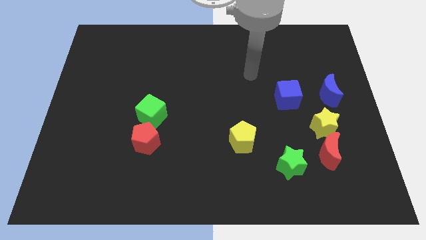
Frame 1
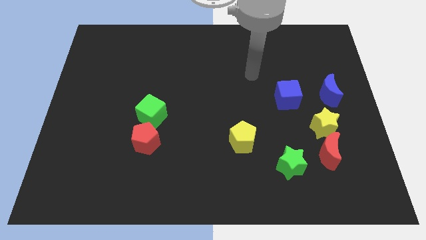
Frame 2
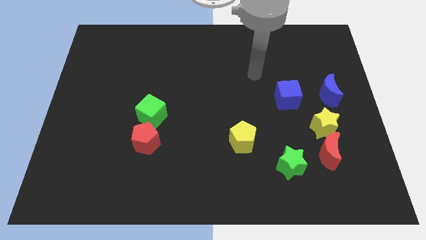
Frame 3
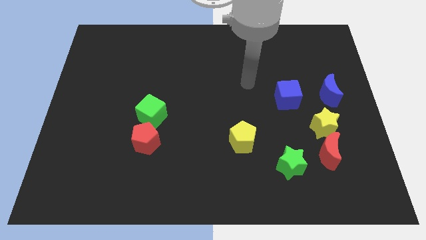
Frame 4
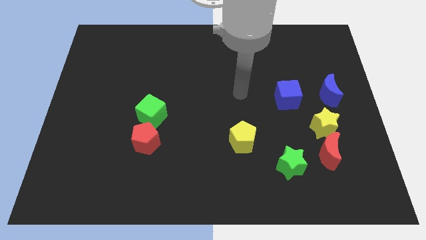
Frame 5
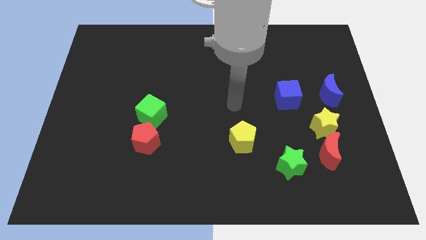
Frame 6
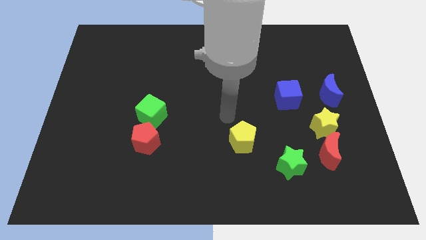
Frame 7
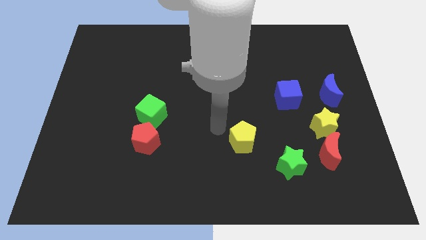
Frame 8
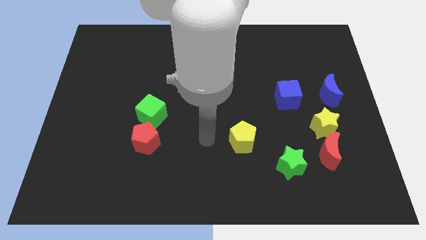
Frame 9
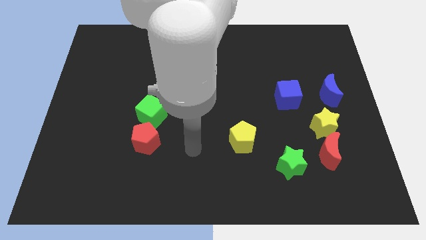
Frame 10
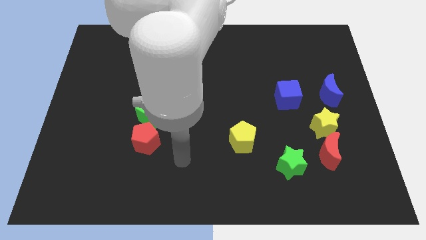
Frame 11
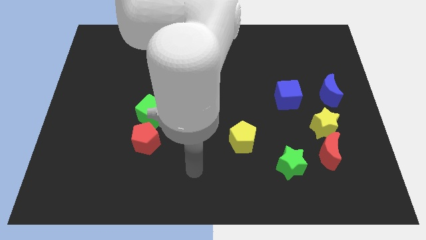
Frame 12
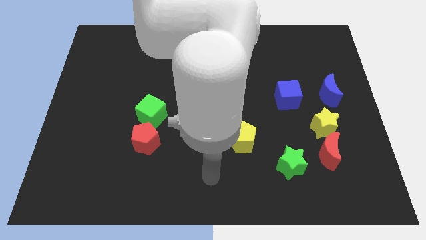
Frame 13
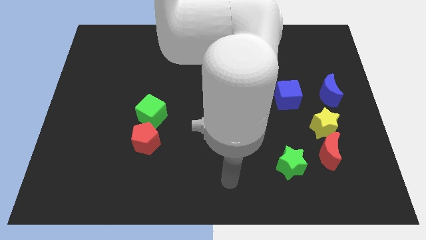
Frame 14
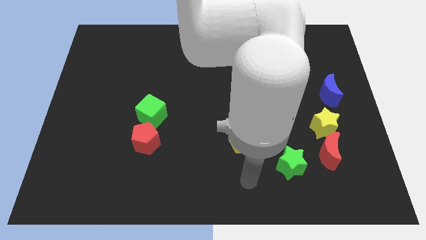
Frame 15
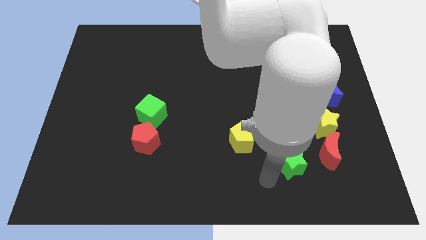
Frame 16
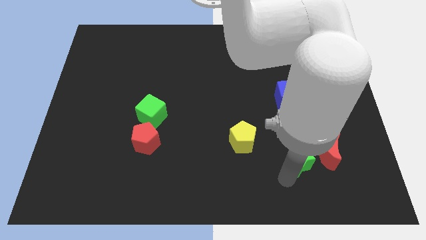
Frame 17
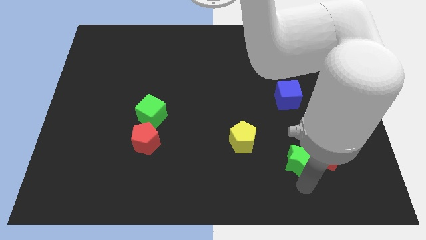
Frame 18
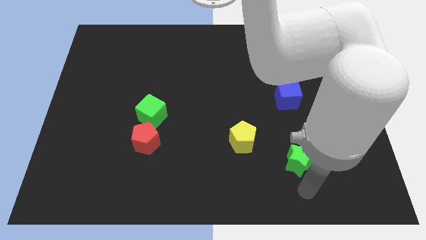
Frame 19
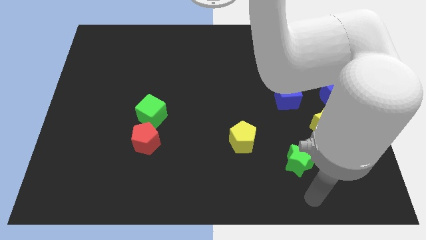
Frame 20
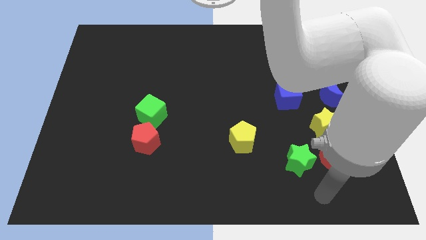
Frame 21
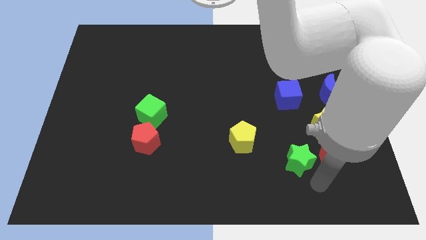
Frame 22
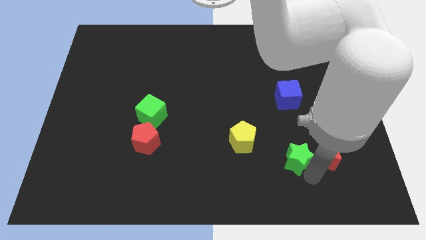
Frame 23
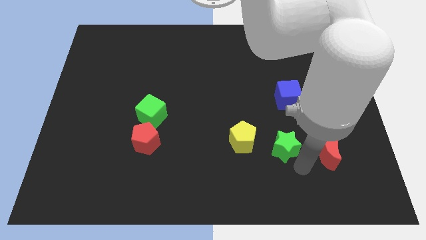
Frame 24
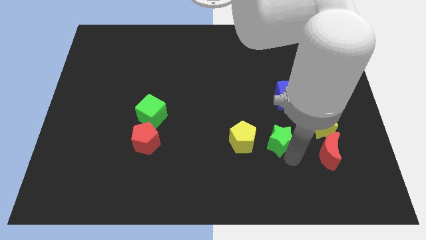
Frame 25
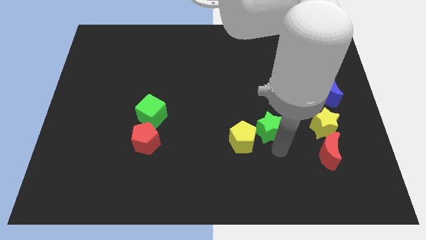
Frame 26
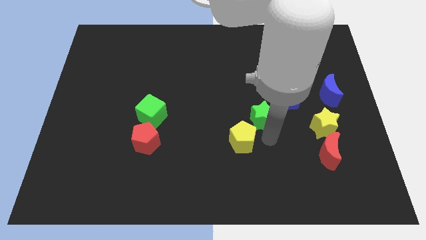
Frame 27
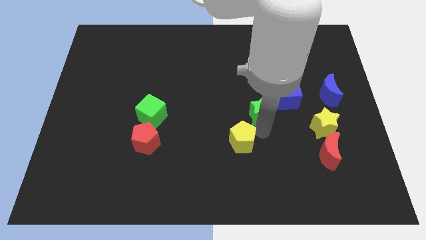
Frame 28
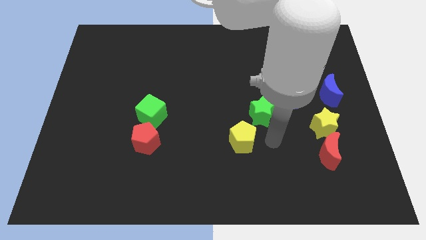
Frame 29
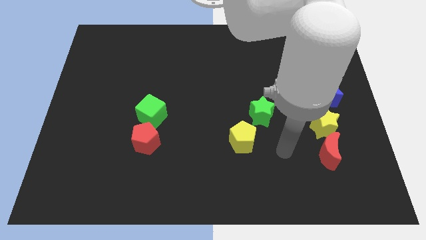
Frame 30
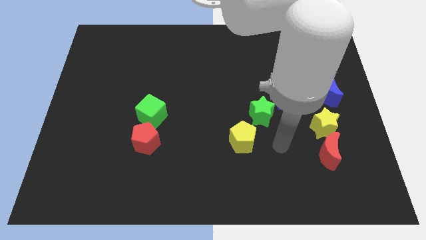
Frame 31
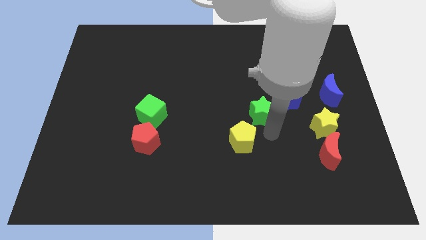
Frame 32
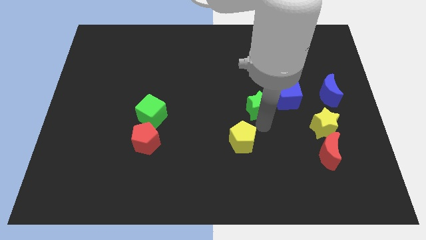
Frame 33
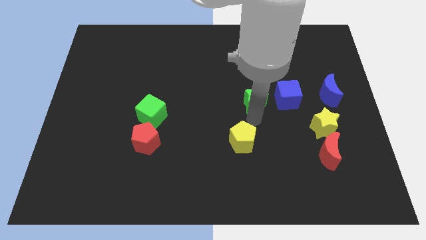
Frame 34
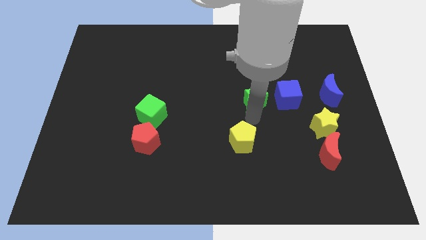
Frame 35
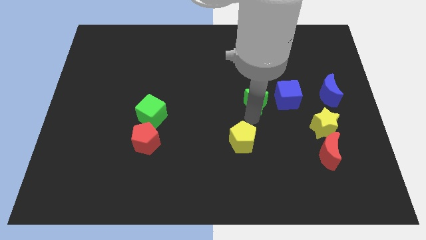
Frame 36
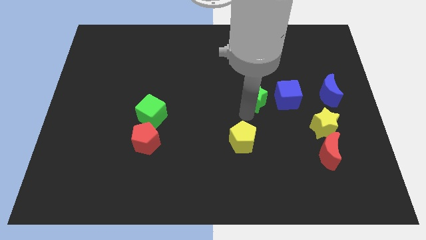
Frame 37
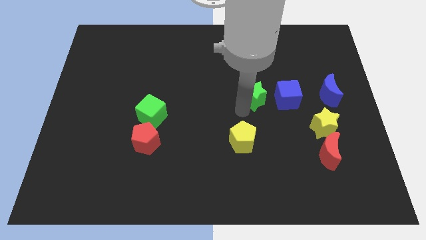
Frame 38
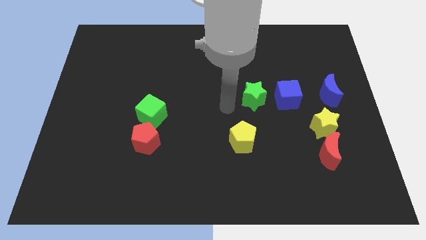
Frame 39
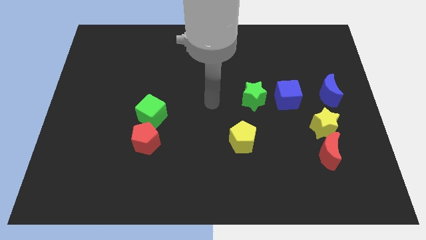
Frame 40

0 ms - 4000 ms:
move the green star to the right side of the blue cube

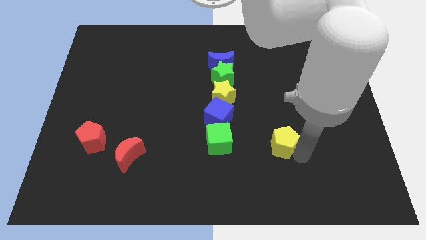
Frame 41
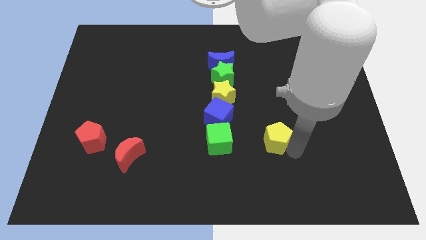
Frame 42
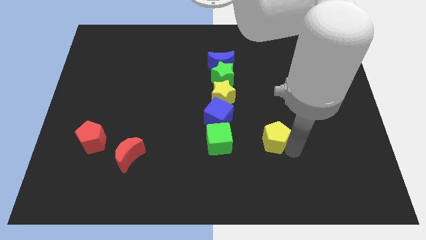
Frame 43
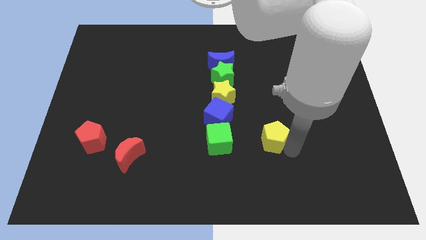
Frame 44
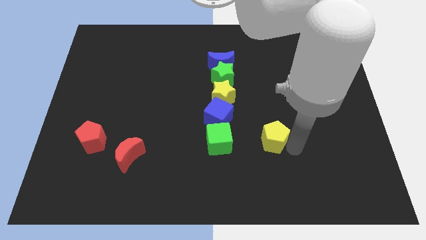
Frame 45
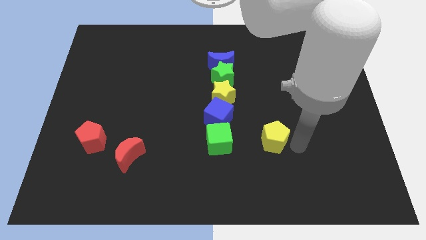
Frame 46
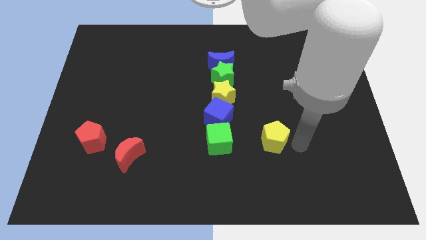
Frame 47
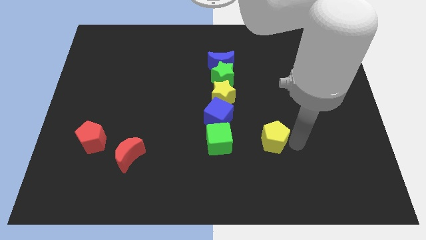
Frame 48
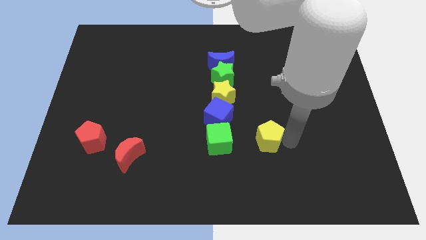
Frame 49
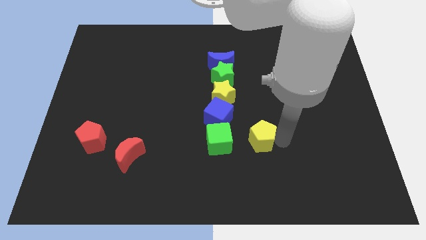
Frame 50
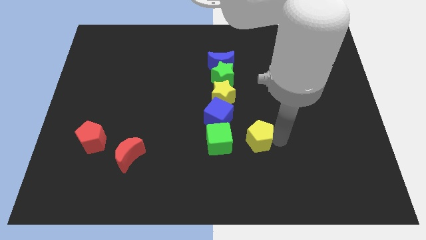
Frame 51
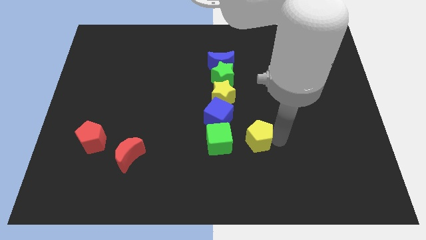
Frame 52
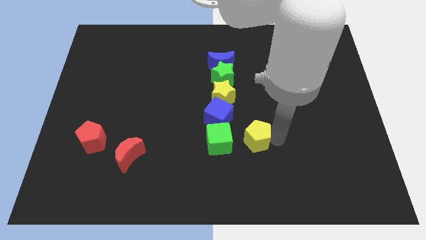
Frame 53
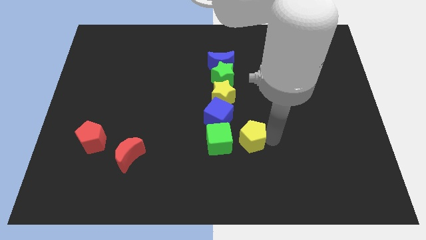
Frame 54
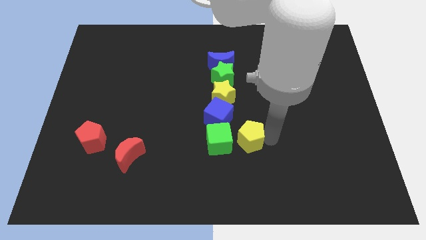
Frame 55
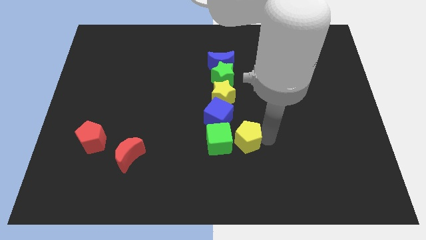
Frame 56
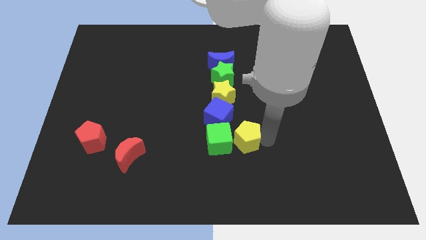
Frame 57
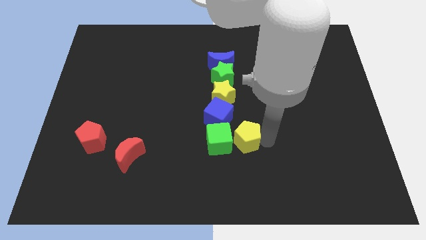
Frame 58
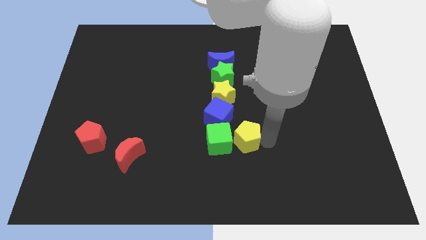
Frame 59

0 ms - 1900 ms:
move the yellow pentagon to the right of the green cube

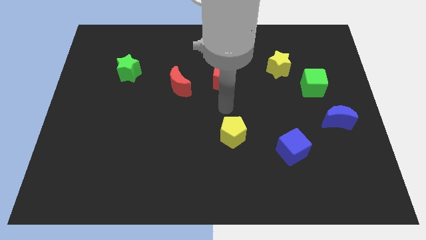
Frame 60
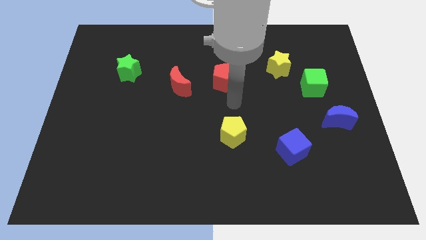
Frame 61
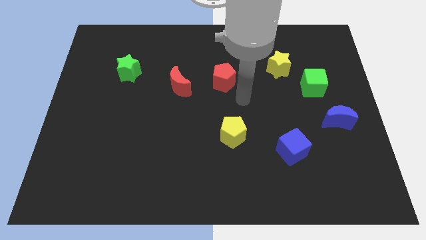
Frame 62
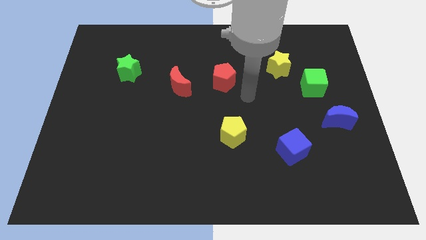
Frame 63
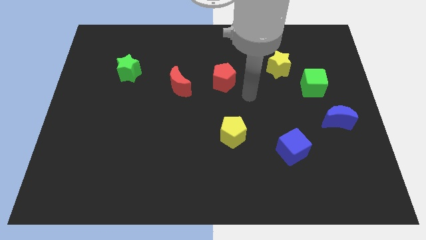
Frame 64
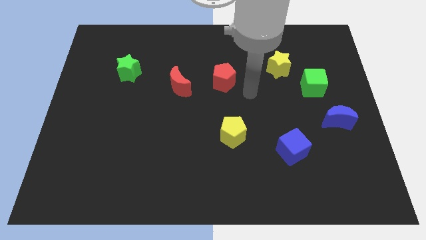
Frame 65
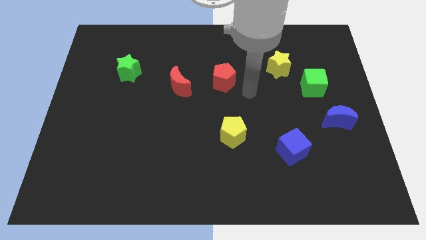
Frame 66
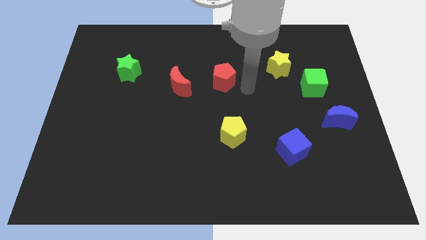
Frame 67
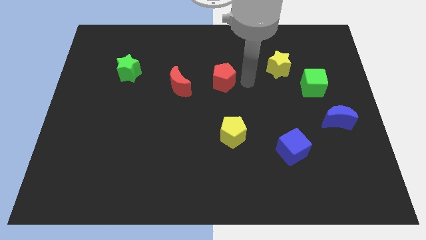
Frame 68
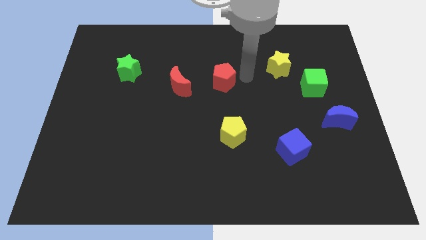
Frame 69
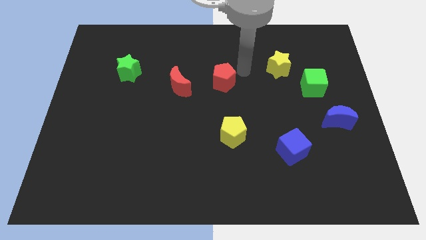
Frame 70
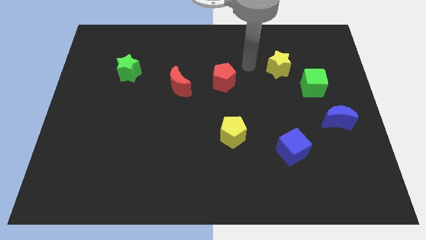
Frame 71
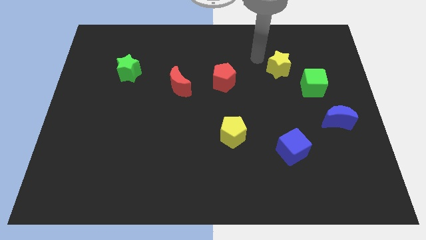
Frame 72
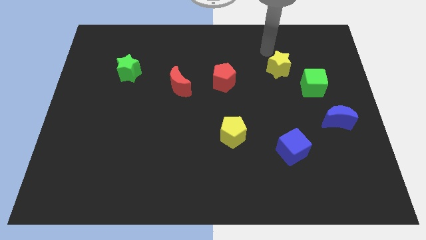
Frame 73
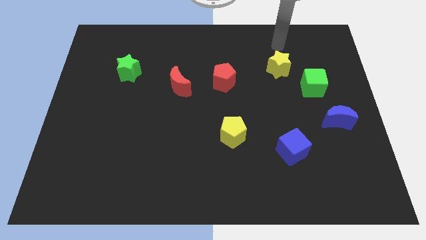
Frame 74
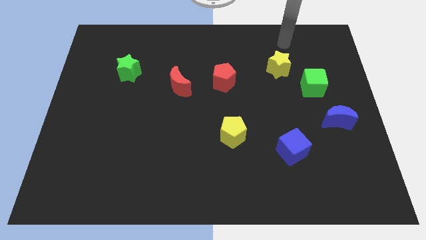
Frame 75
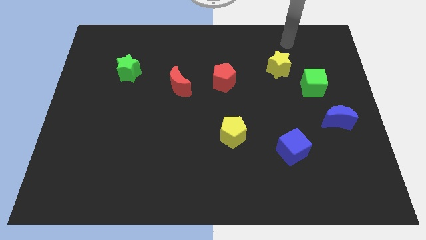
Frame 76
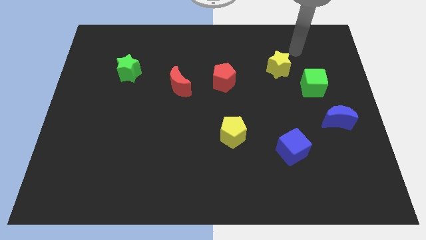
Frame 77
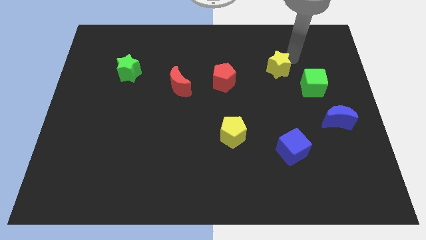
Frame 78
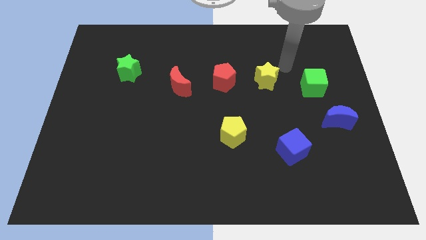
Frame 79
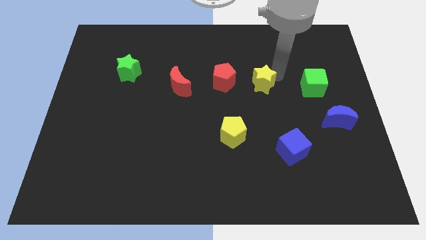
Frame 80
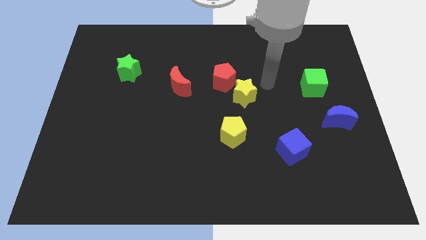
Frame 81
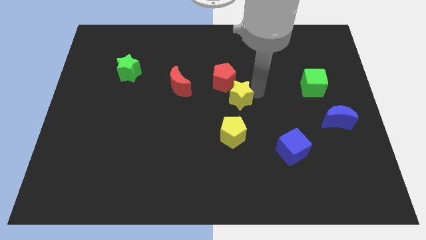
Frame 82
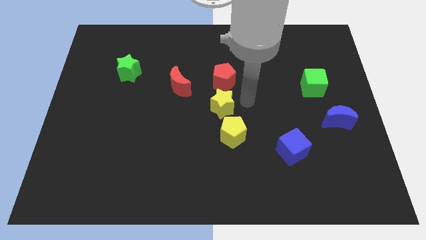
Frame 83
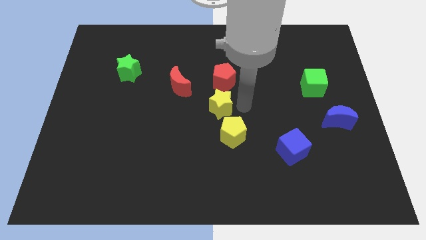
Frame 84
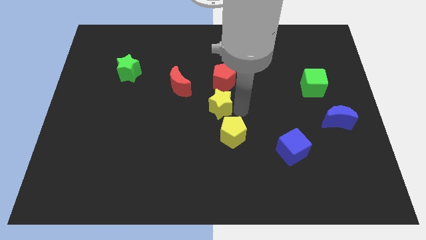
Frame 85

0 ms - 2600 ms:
move the yellow star to the bottom of the red pentagon

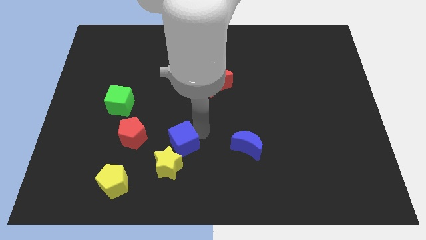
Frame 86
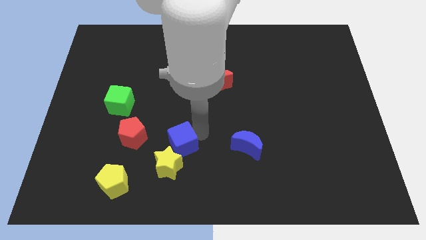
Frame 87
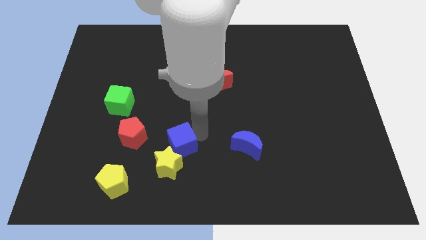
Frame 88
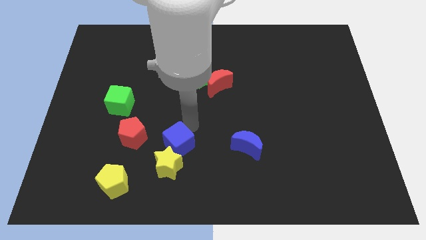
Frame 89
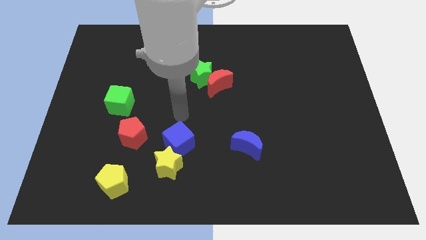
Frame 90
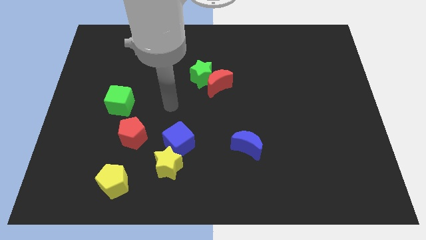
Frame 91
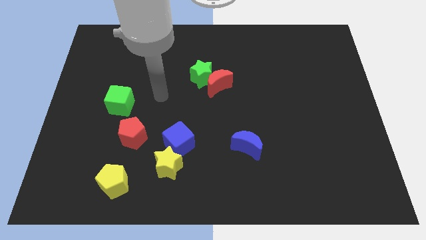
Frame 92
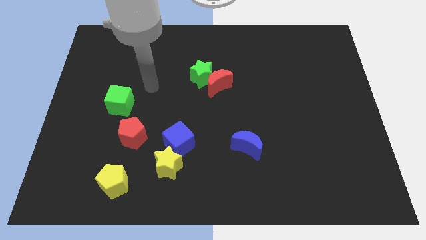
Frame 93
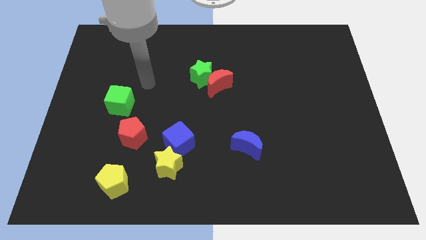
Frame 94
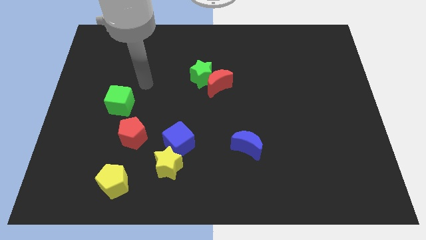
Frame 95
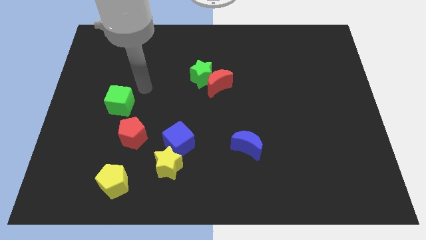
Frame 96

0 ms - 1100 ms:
move the arm away from the blue cube
